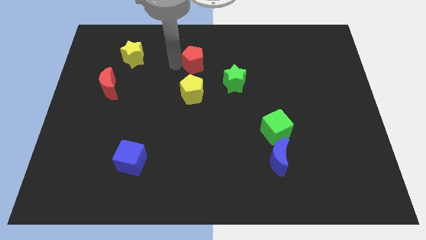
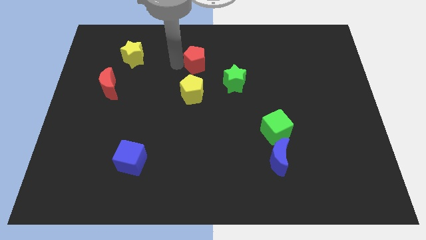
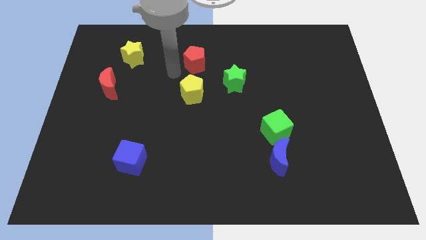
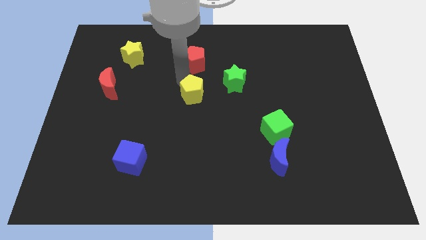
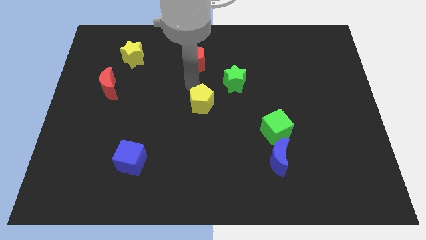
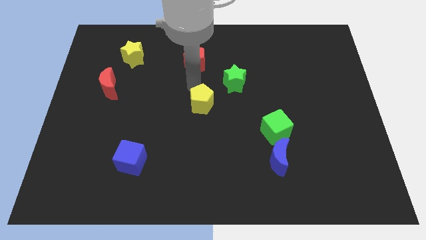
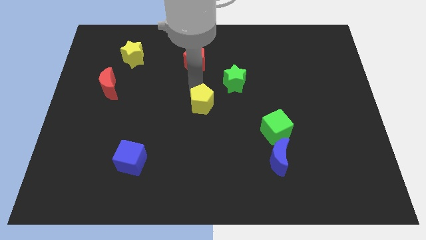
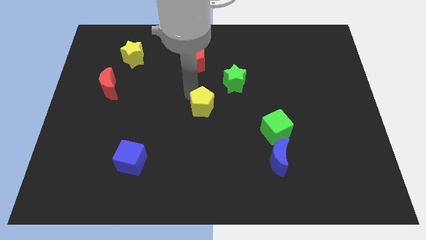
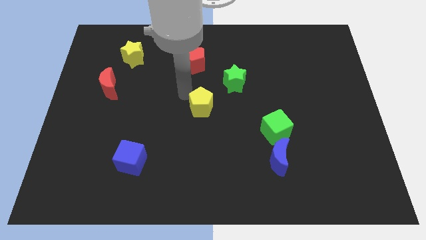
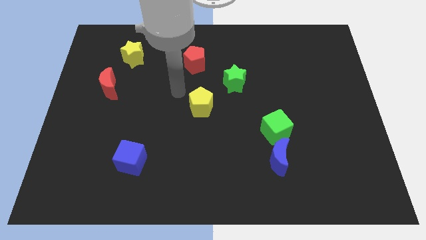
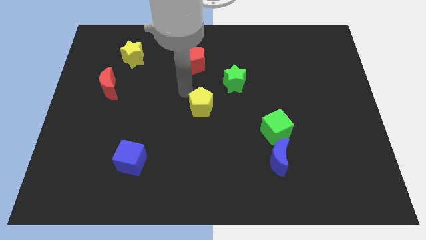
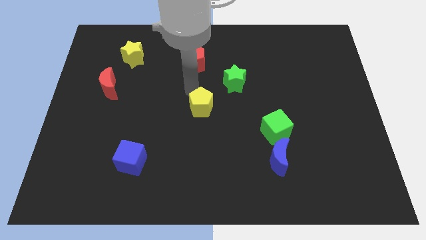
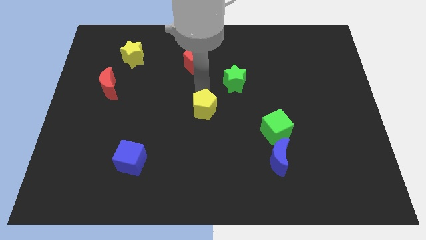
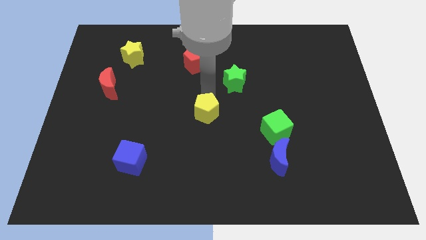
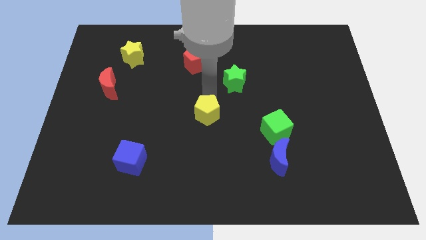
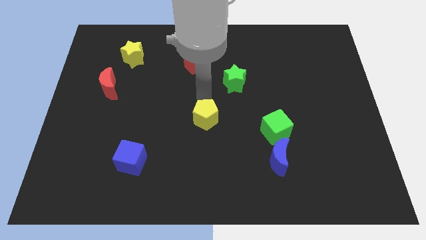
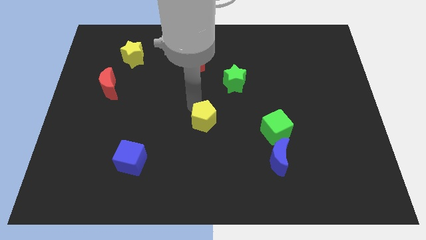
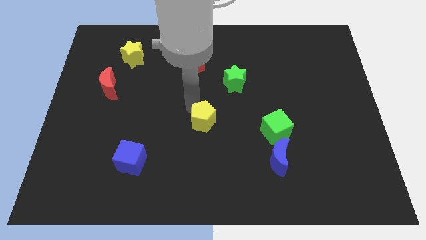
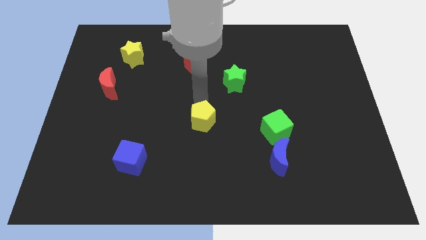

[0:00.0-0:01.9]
put the yellow pentagon to the center of the board

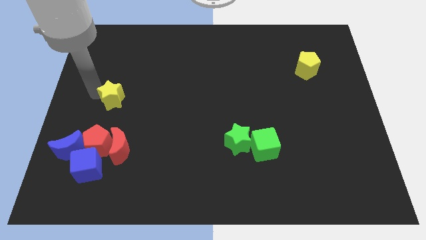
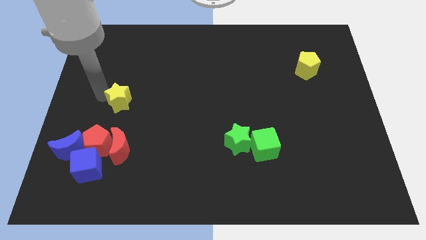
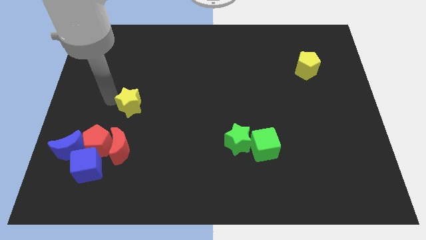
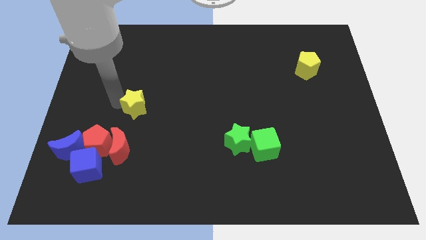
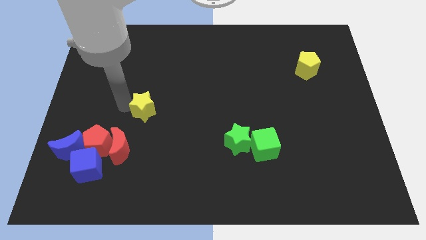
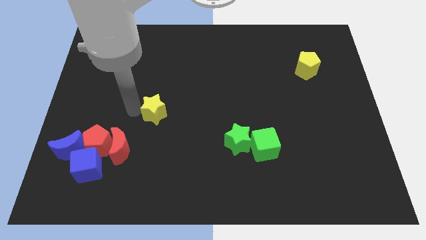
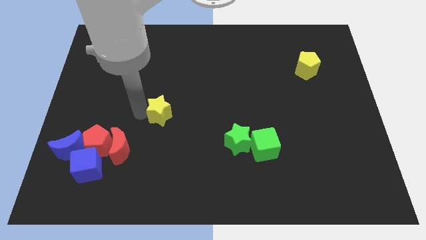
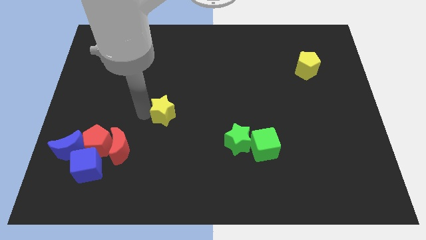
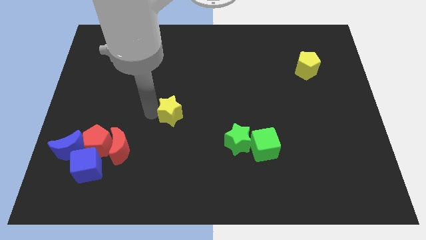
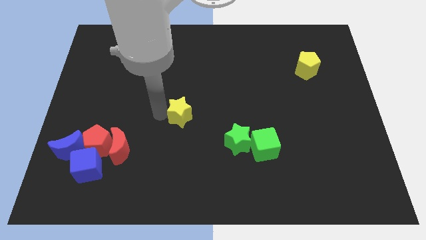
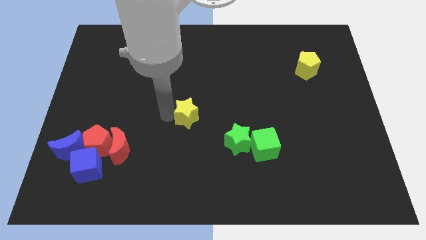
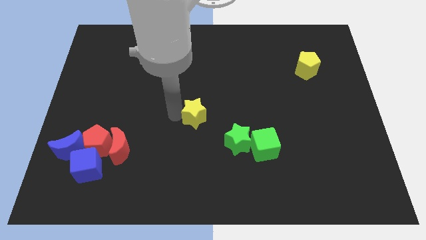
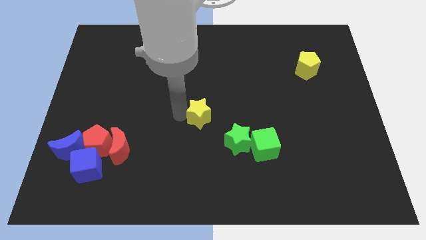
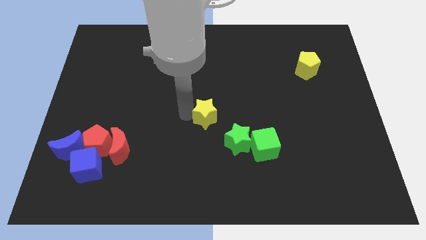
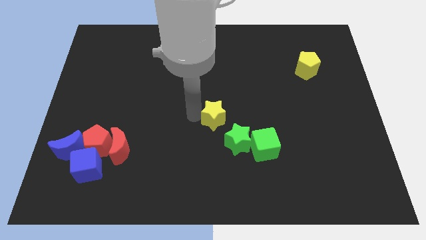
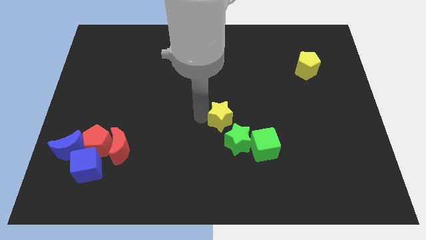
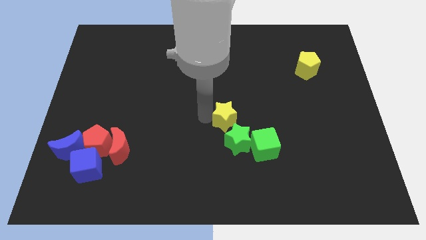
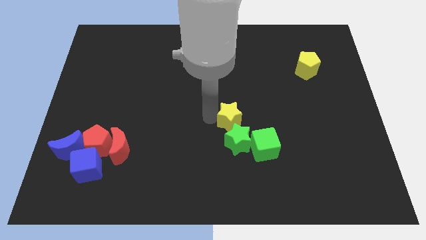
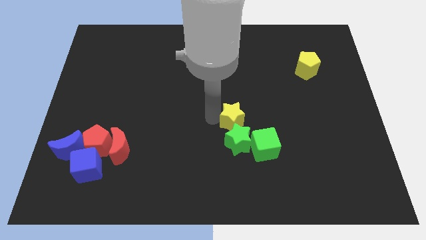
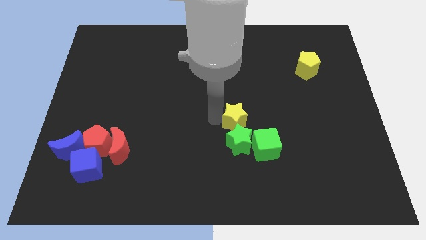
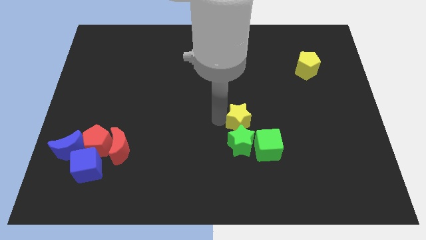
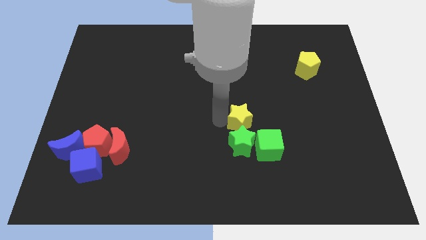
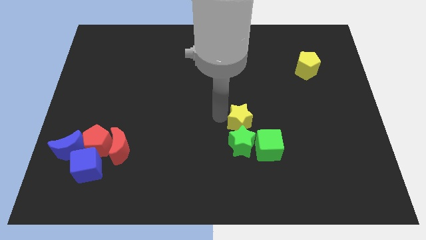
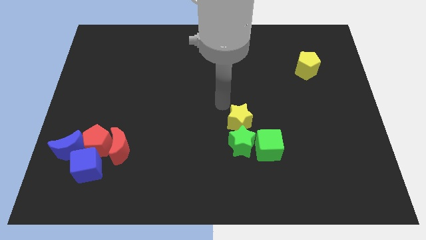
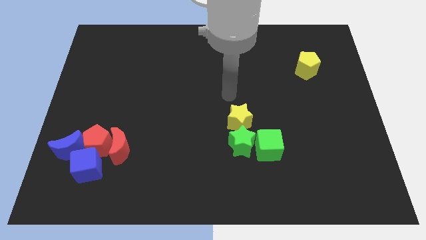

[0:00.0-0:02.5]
move the yellow star to the top of the green star

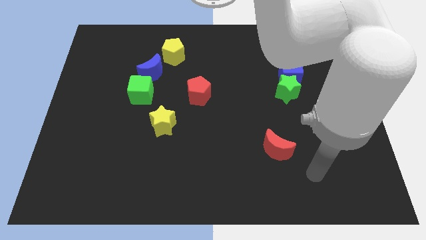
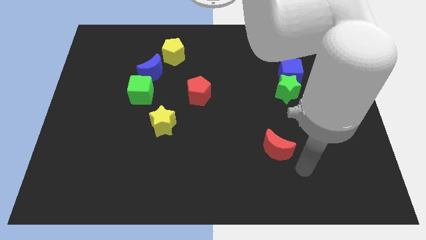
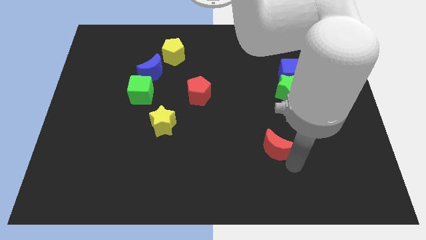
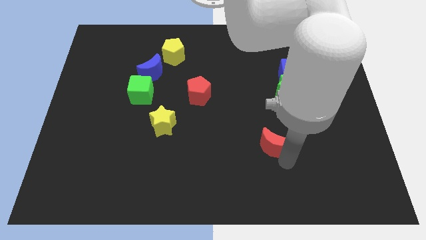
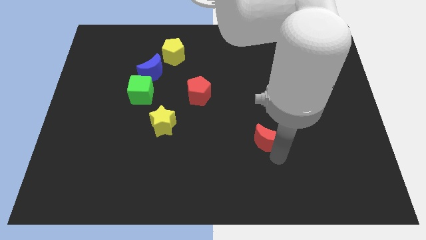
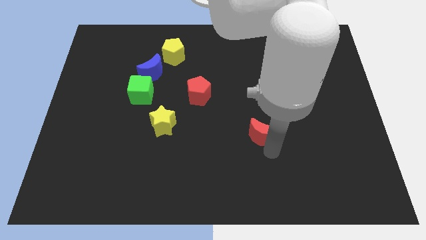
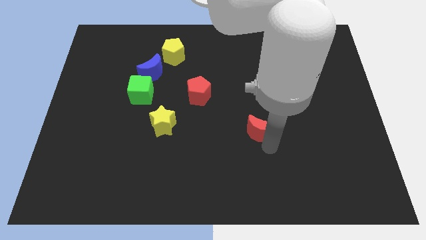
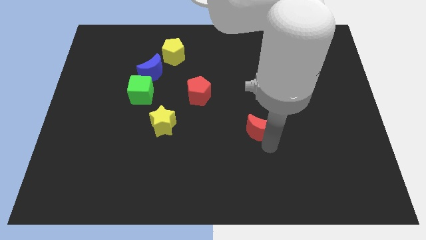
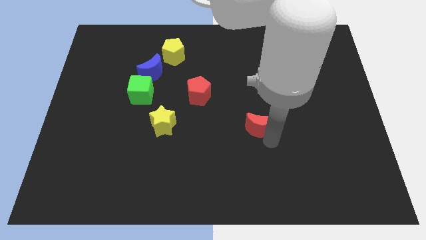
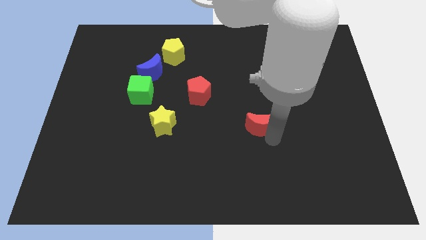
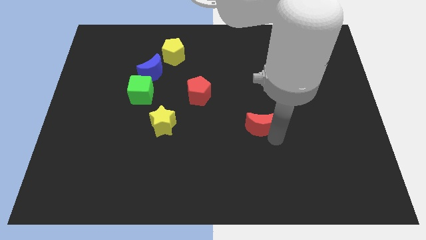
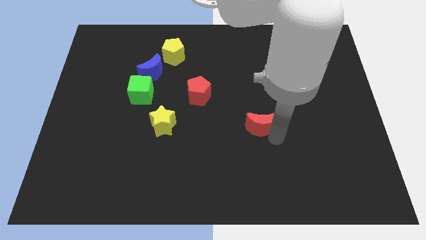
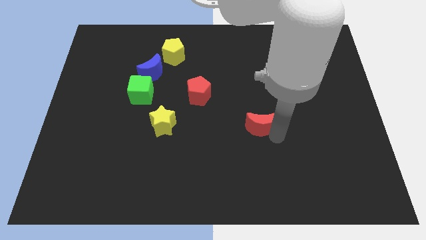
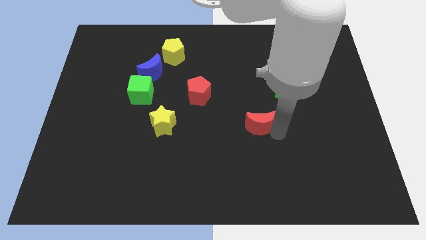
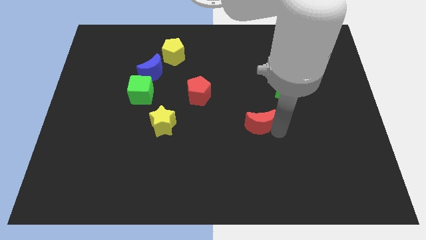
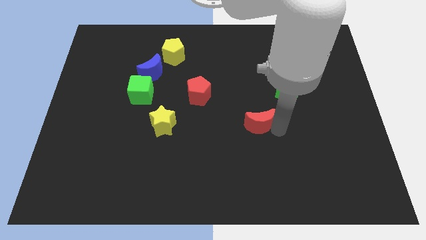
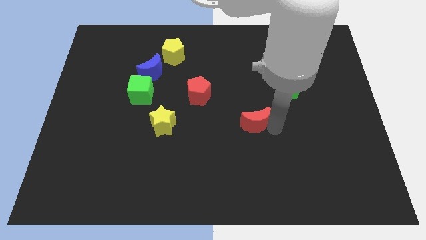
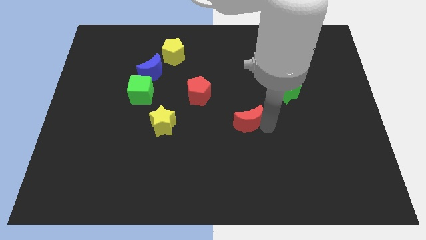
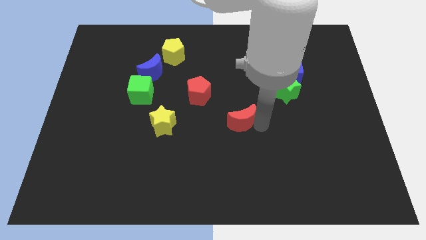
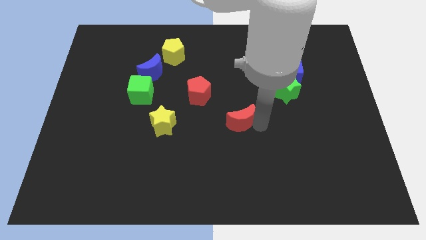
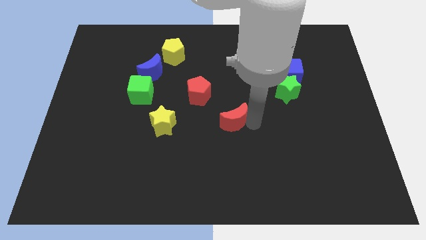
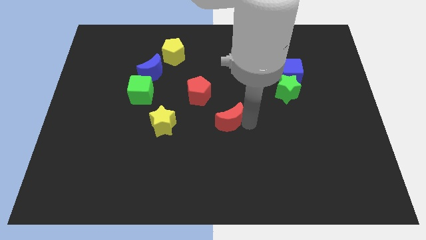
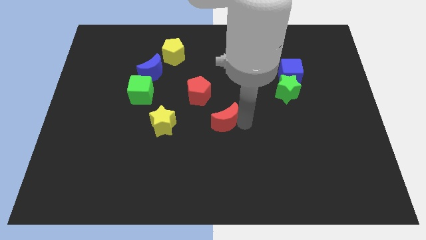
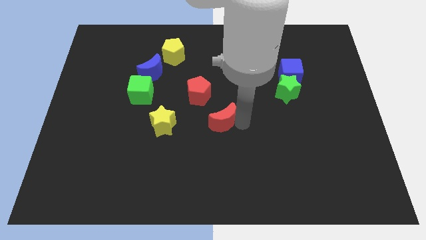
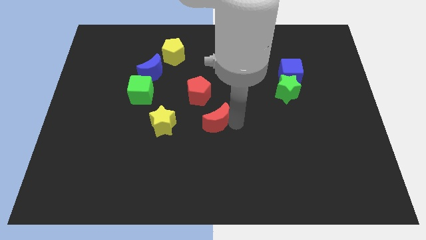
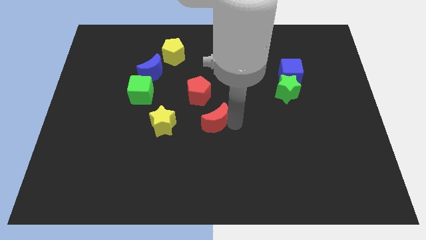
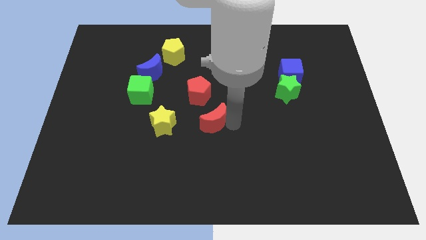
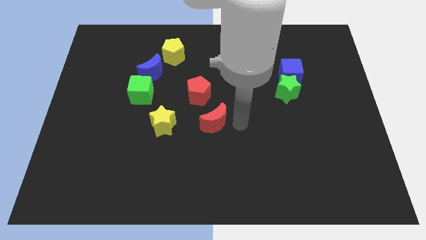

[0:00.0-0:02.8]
move the red moon right to the yellow star

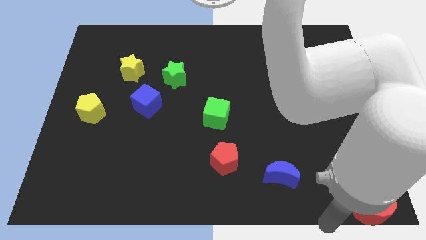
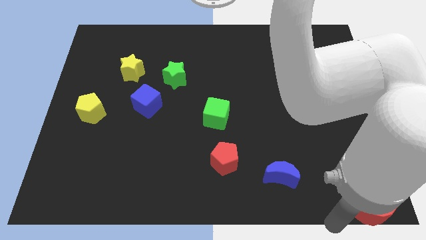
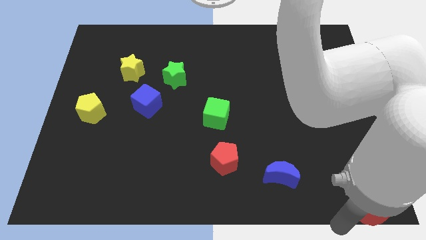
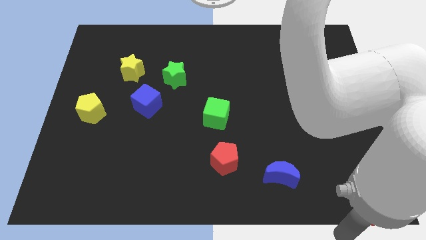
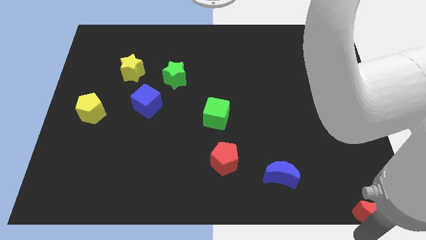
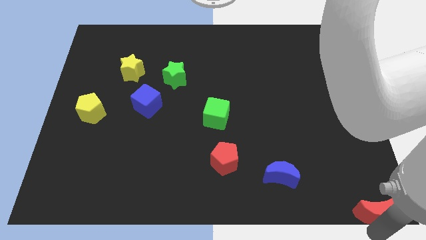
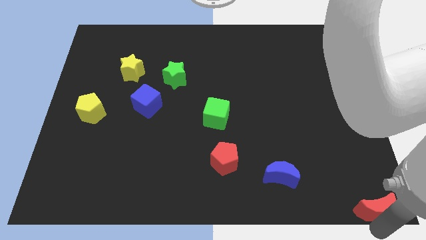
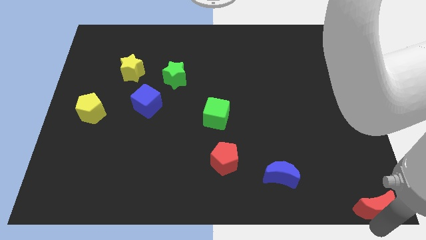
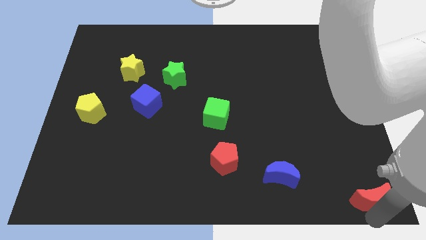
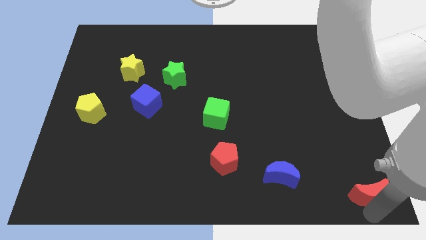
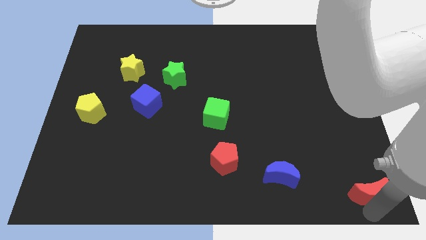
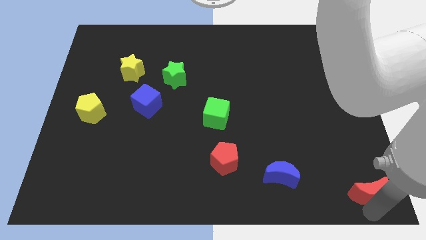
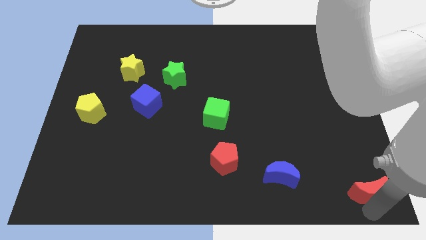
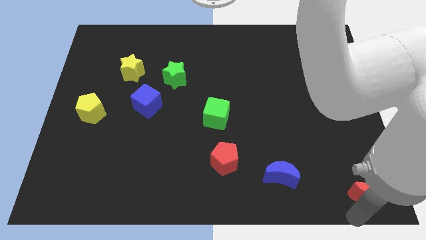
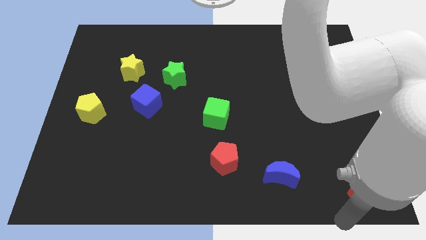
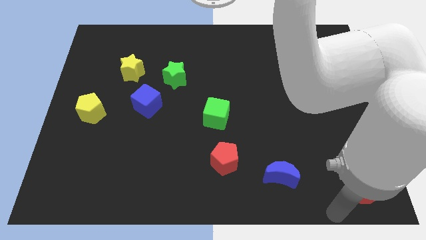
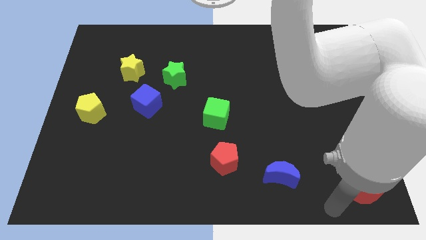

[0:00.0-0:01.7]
place the red moon to the right of the blue crescent

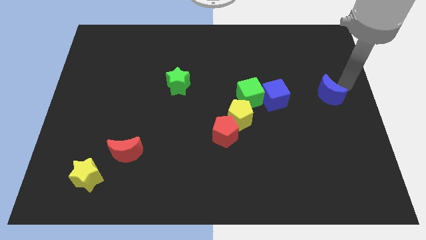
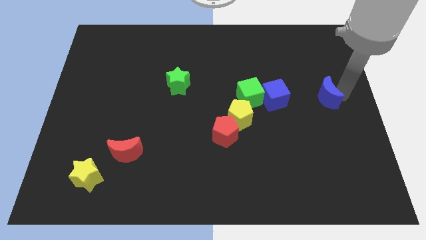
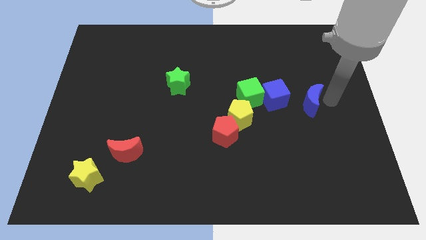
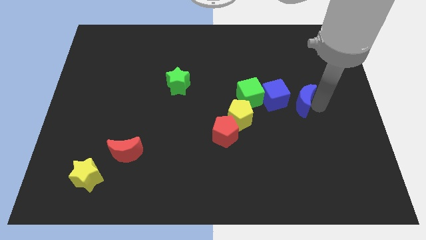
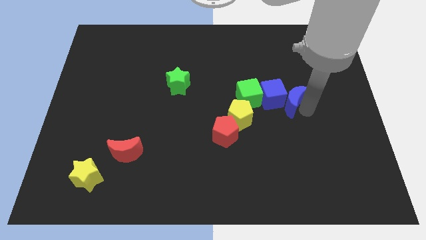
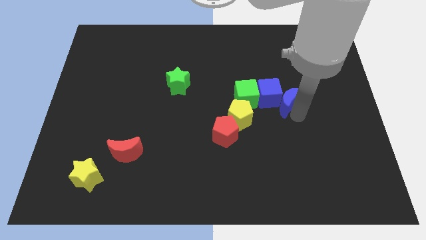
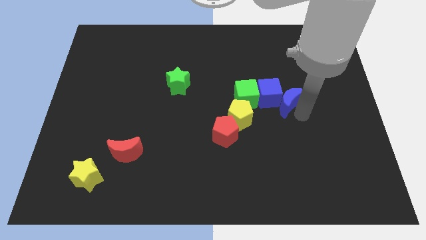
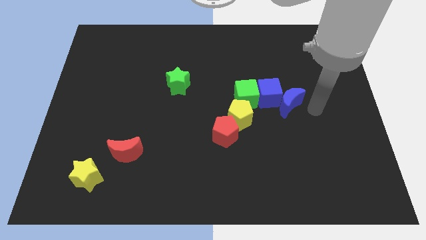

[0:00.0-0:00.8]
push the blue moon in to the clue cube
